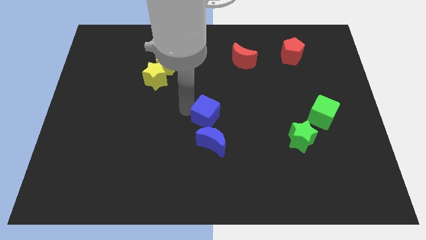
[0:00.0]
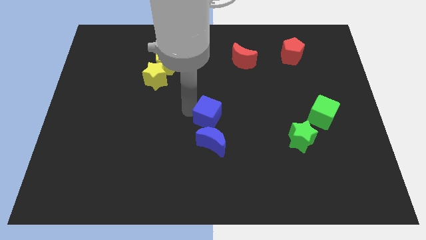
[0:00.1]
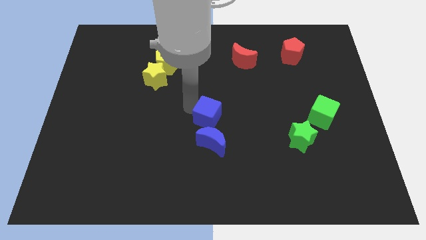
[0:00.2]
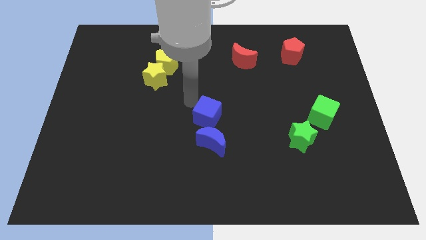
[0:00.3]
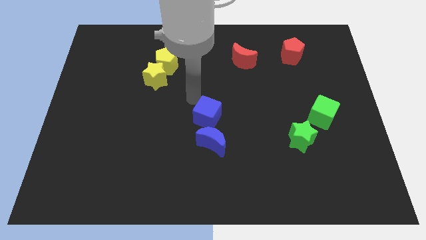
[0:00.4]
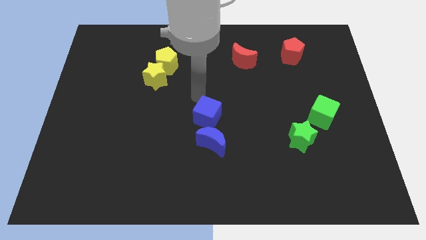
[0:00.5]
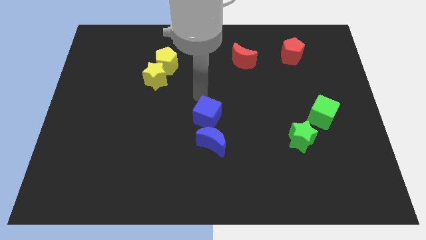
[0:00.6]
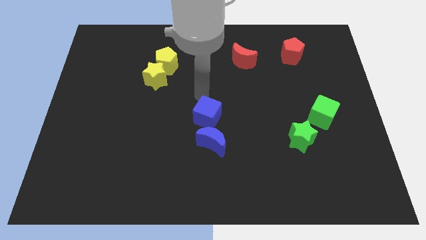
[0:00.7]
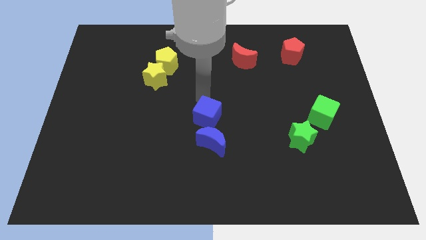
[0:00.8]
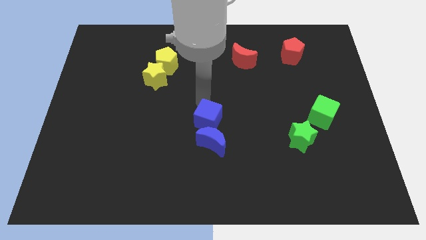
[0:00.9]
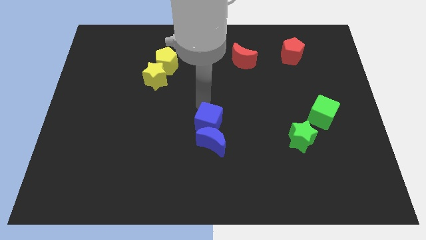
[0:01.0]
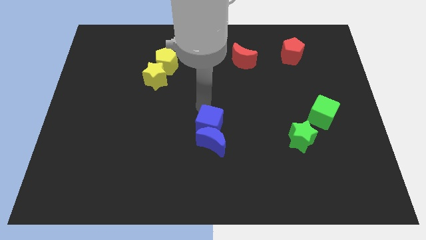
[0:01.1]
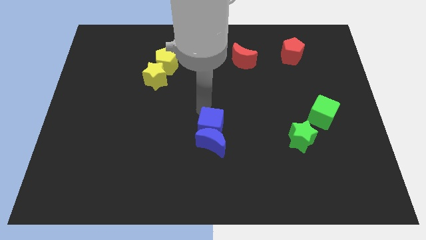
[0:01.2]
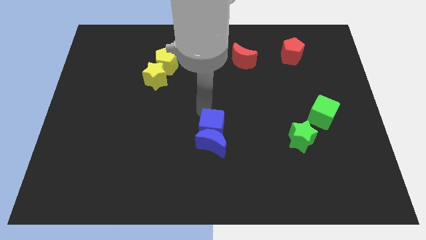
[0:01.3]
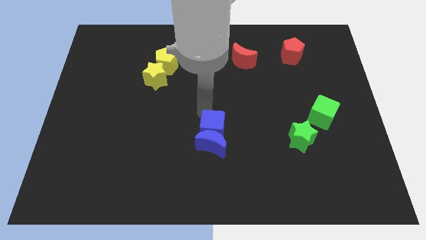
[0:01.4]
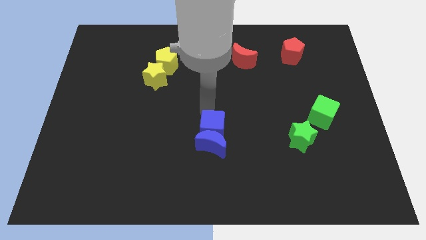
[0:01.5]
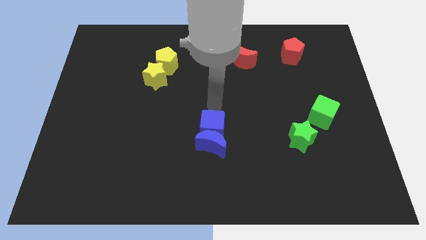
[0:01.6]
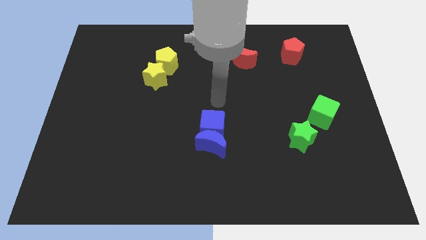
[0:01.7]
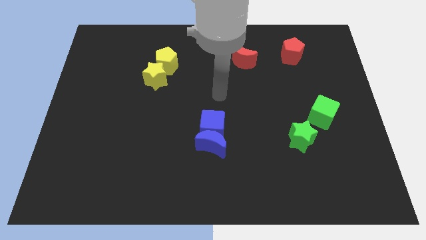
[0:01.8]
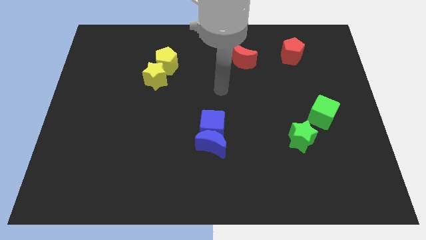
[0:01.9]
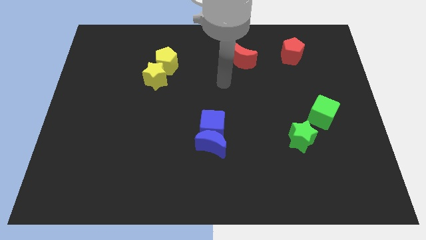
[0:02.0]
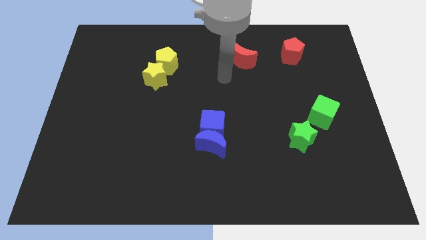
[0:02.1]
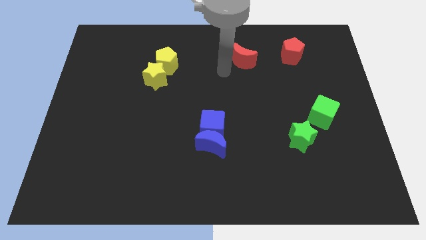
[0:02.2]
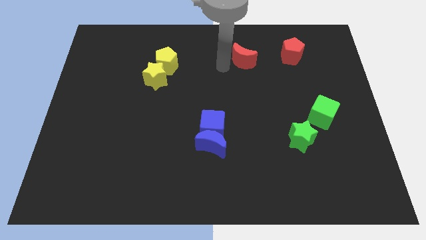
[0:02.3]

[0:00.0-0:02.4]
place the arm to the left of the red moon

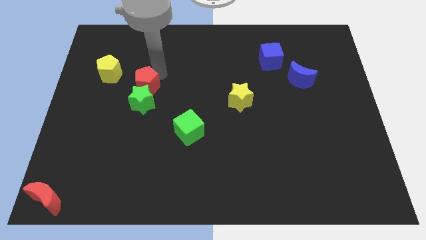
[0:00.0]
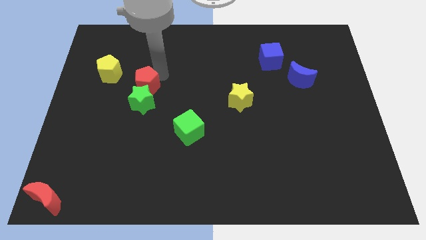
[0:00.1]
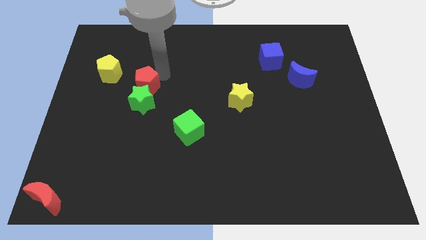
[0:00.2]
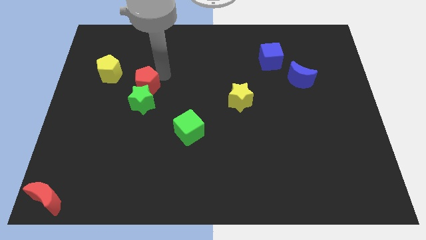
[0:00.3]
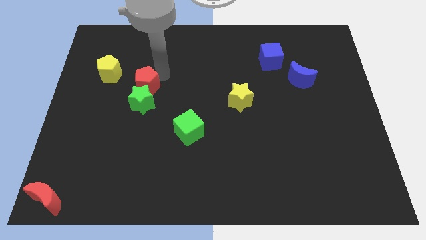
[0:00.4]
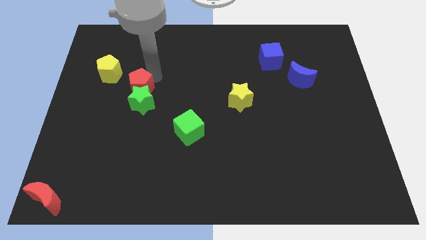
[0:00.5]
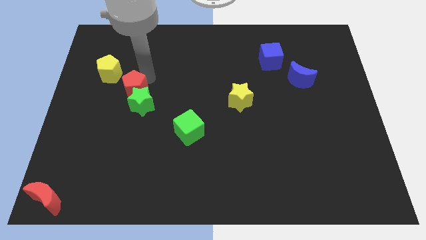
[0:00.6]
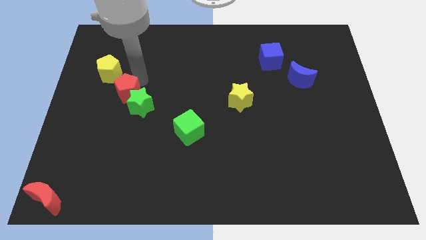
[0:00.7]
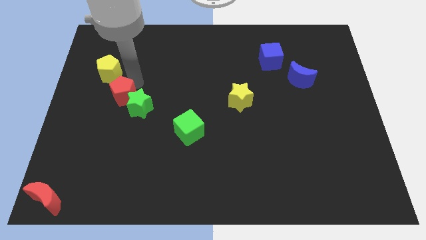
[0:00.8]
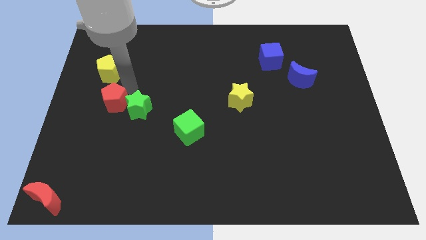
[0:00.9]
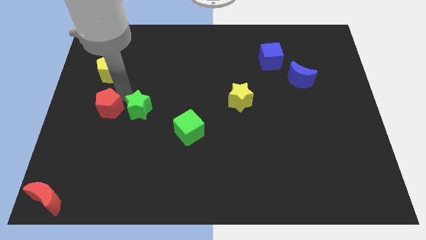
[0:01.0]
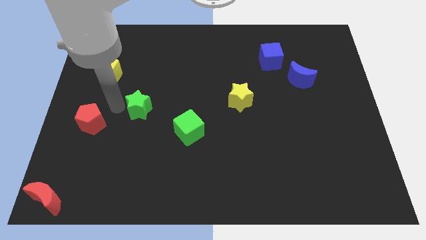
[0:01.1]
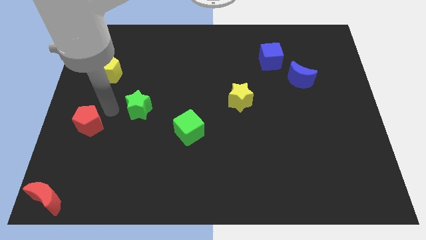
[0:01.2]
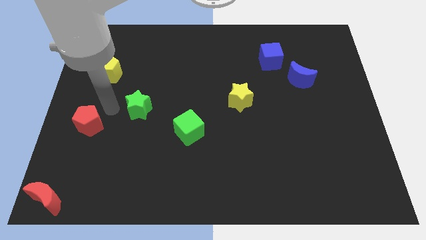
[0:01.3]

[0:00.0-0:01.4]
separate the red pentagon from the green star

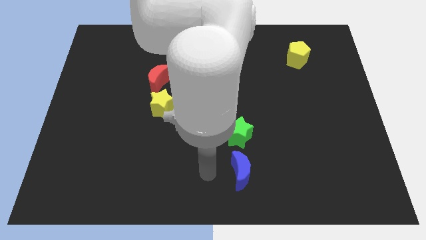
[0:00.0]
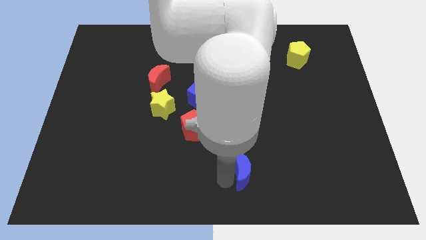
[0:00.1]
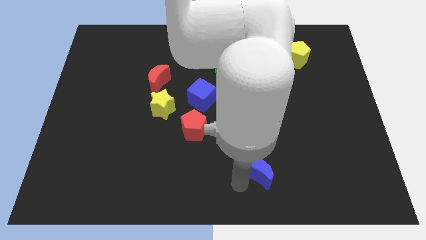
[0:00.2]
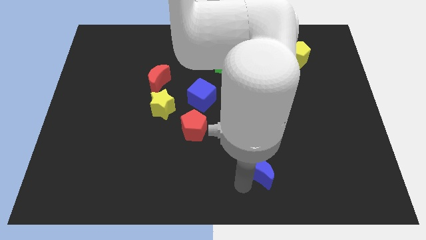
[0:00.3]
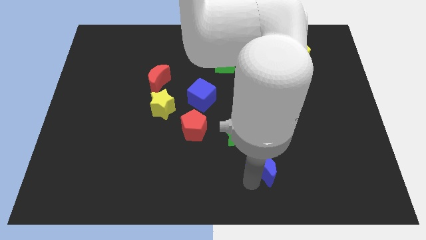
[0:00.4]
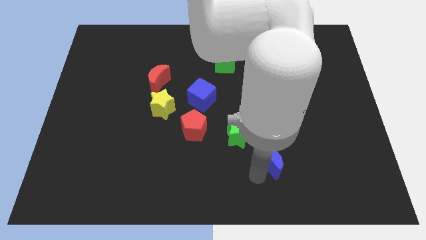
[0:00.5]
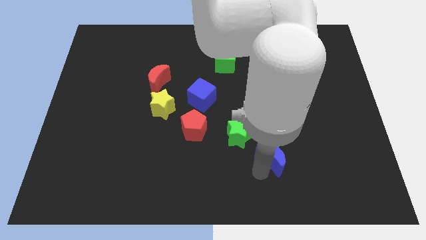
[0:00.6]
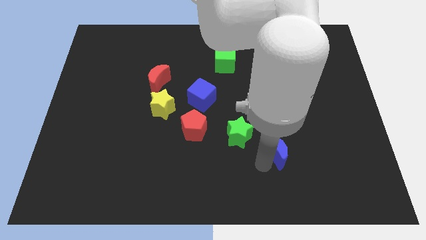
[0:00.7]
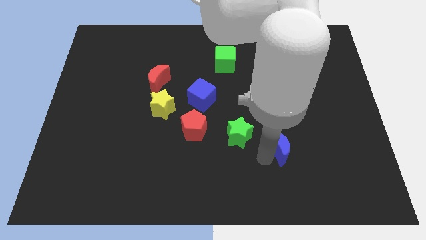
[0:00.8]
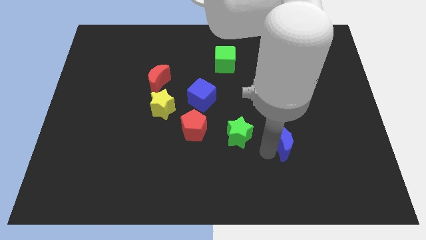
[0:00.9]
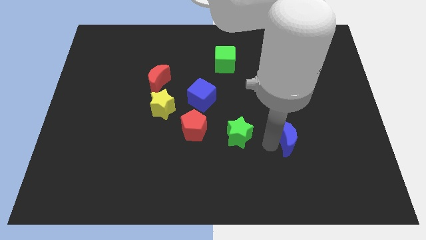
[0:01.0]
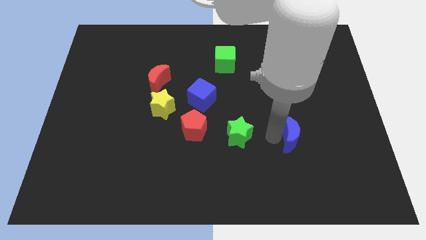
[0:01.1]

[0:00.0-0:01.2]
push the blue crescent to the right side of the green star

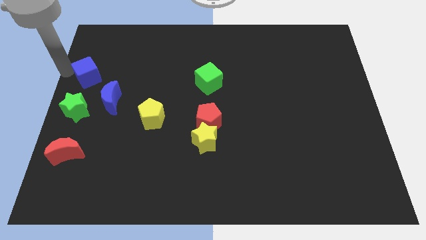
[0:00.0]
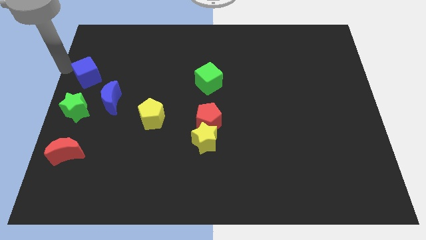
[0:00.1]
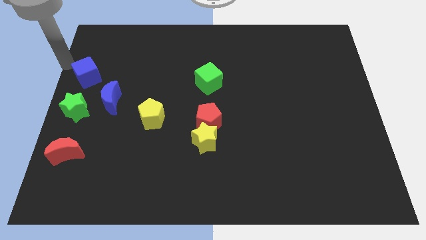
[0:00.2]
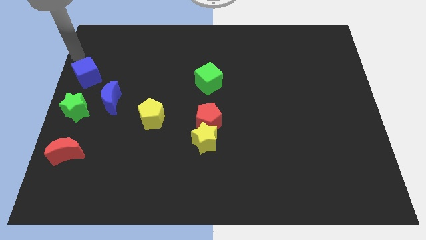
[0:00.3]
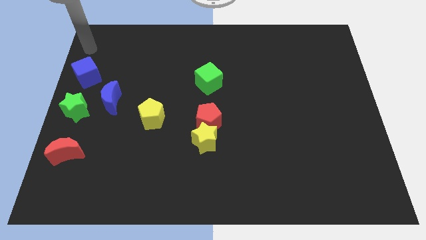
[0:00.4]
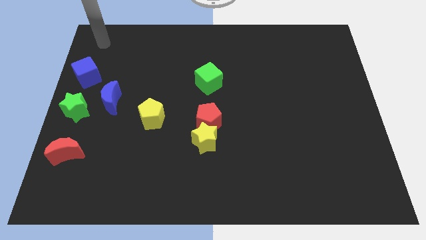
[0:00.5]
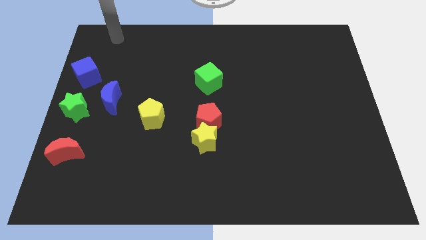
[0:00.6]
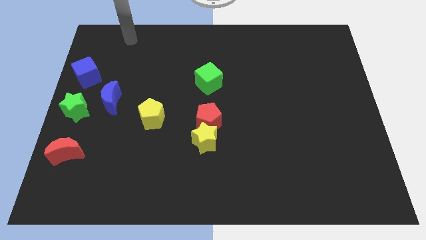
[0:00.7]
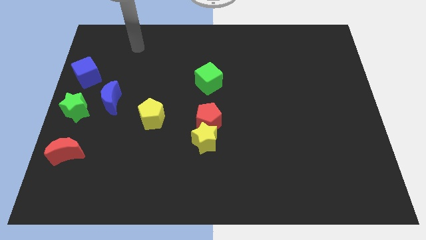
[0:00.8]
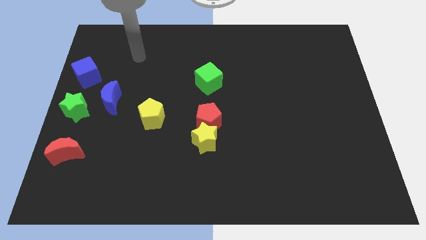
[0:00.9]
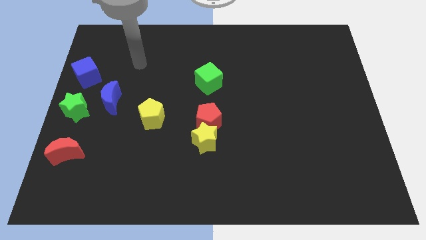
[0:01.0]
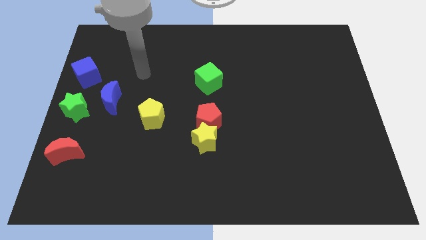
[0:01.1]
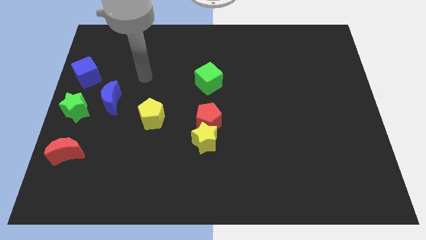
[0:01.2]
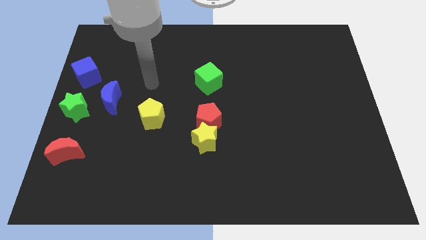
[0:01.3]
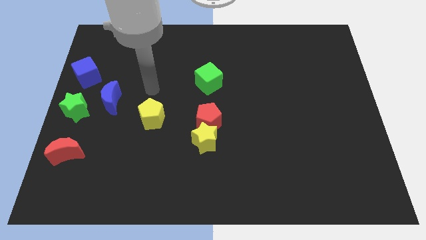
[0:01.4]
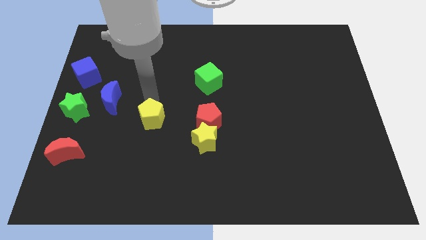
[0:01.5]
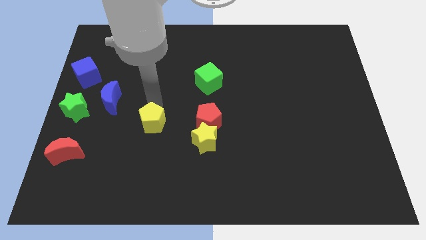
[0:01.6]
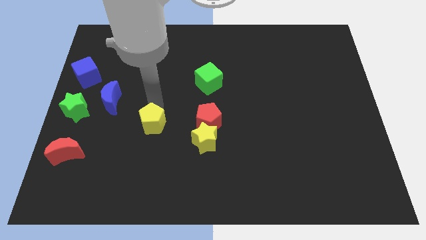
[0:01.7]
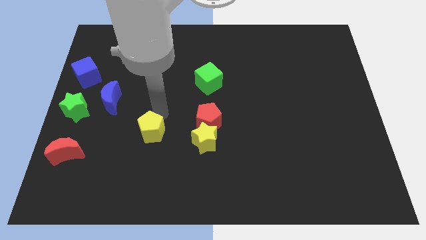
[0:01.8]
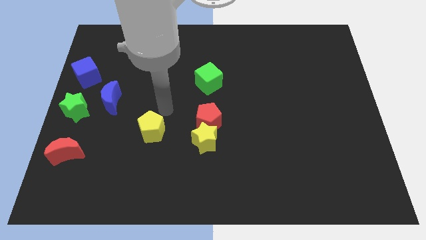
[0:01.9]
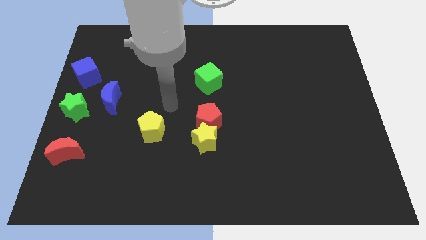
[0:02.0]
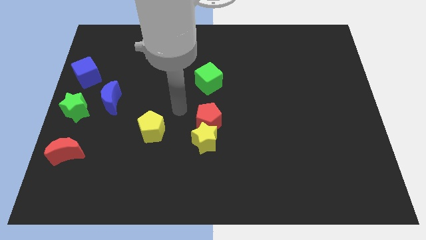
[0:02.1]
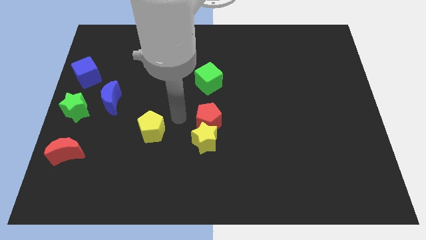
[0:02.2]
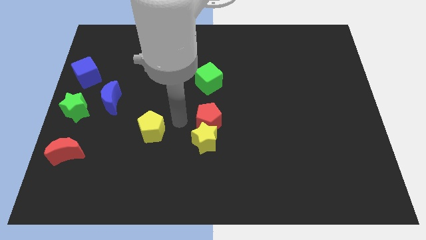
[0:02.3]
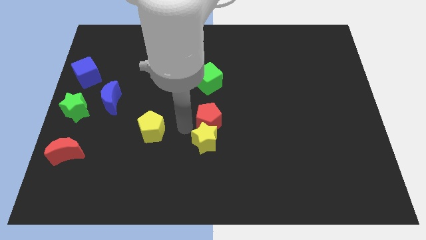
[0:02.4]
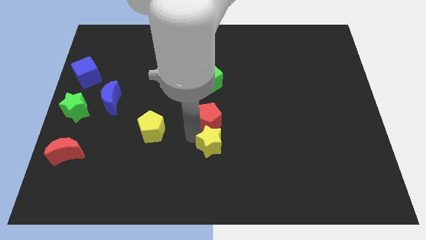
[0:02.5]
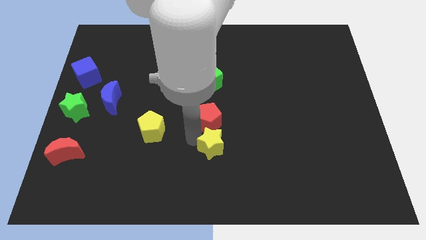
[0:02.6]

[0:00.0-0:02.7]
push the yellow pentagon a bit down

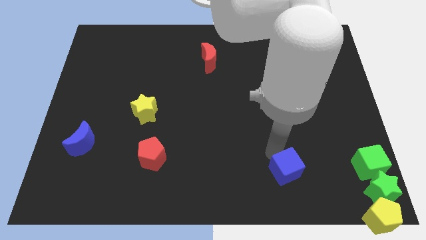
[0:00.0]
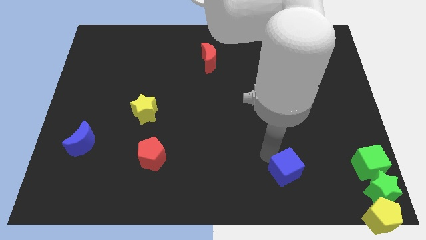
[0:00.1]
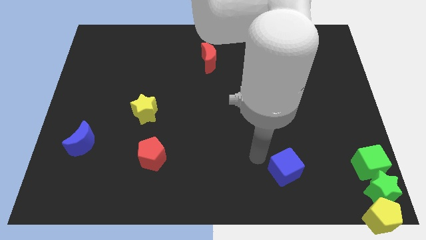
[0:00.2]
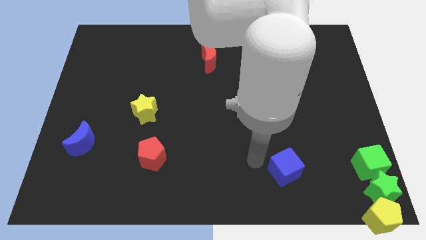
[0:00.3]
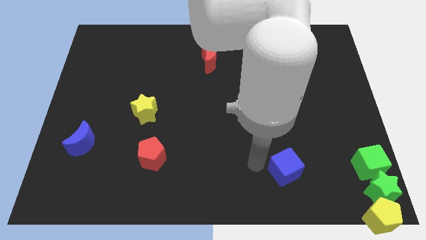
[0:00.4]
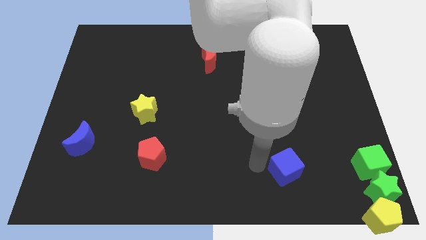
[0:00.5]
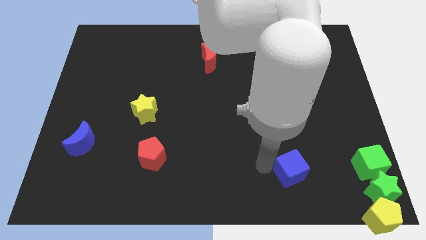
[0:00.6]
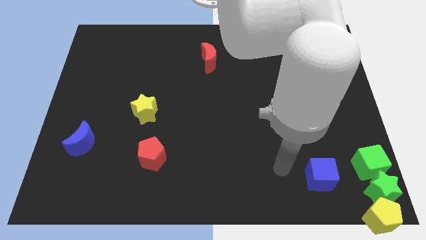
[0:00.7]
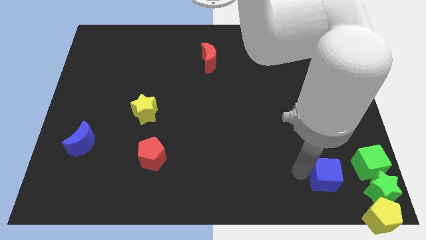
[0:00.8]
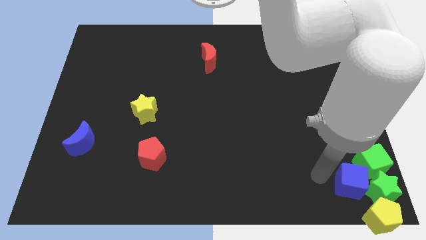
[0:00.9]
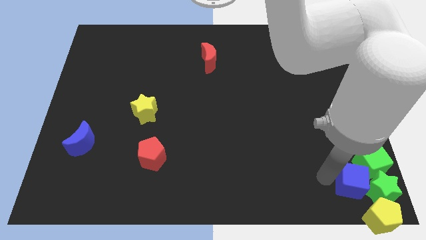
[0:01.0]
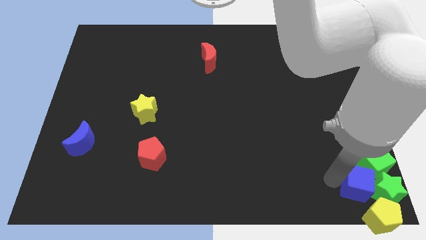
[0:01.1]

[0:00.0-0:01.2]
move the blue cube to the left of the green blocks
